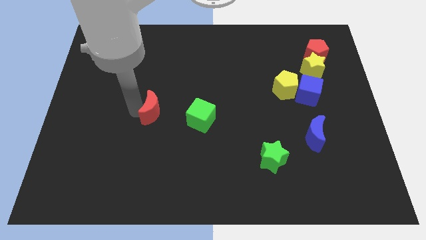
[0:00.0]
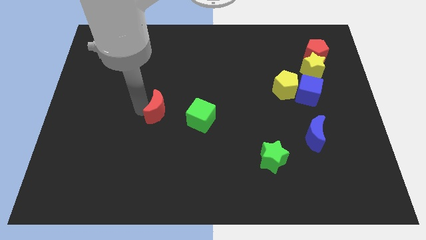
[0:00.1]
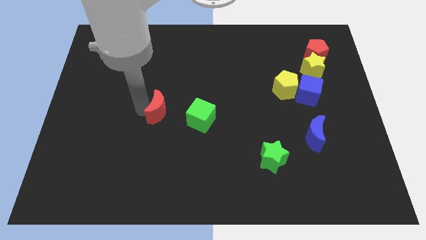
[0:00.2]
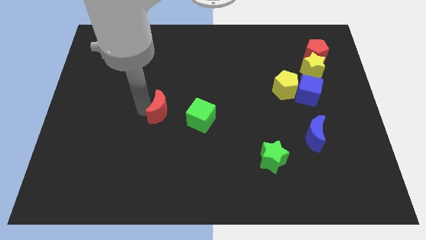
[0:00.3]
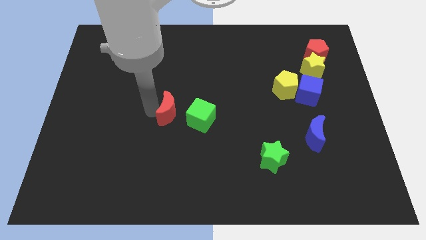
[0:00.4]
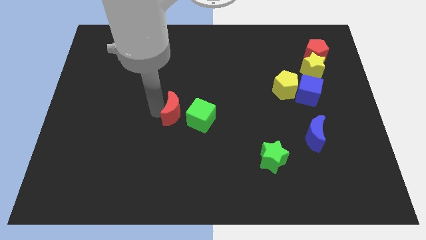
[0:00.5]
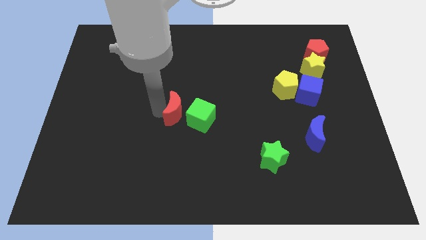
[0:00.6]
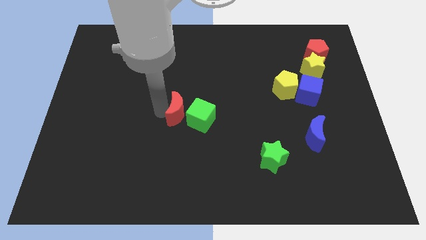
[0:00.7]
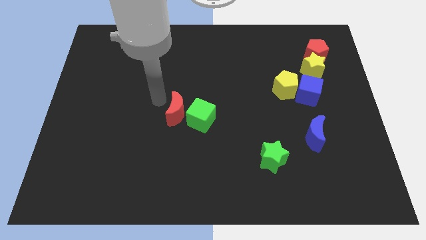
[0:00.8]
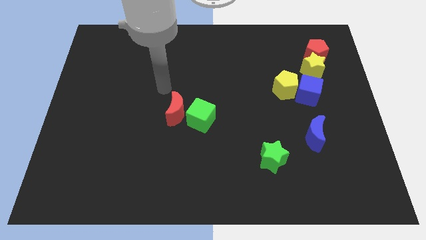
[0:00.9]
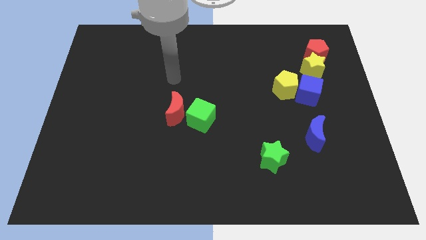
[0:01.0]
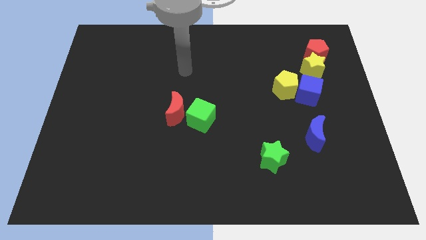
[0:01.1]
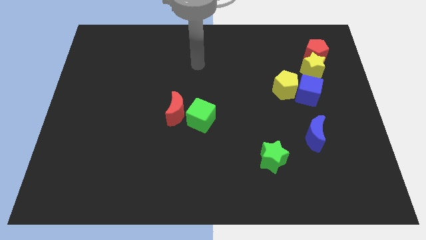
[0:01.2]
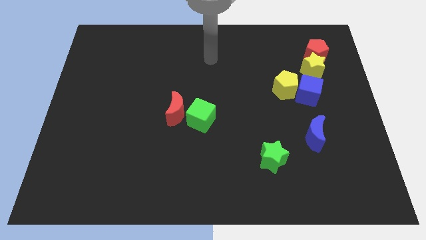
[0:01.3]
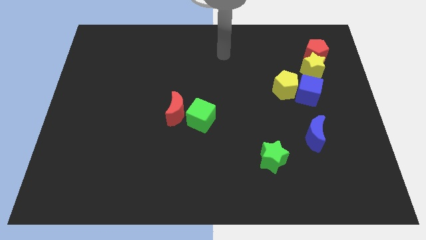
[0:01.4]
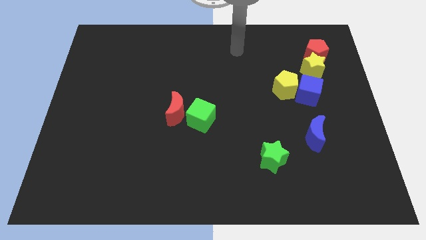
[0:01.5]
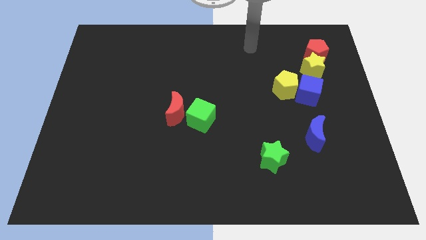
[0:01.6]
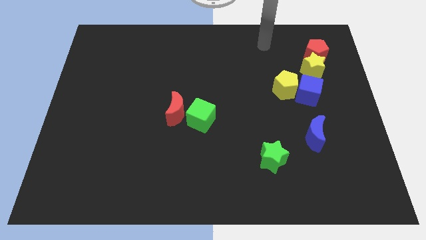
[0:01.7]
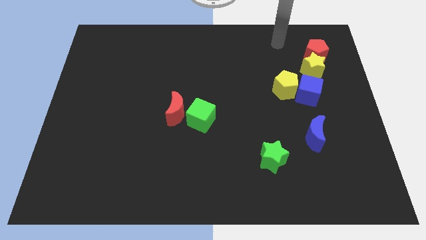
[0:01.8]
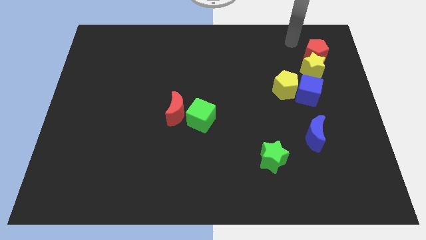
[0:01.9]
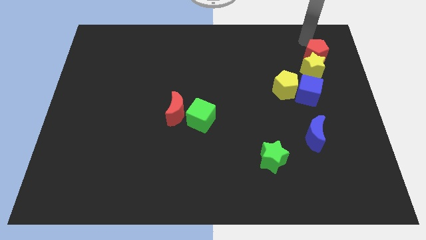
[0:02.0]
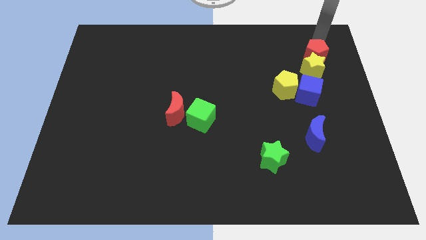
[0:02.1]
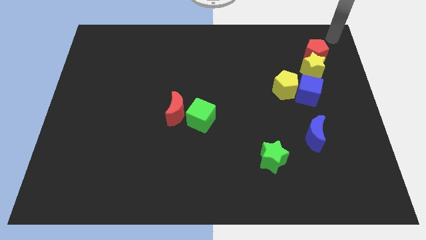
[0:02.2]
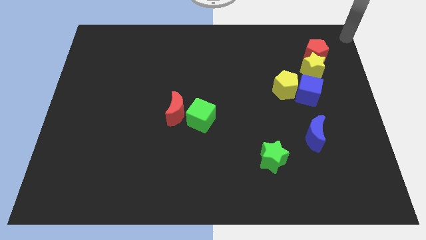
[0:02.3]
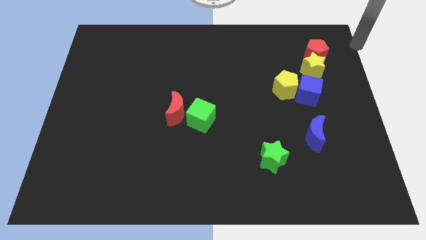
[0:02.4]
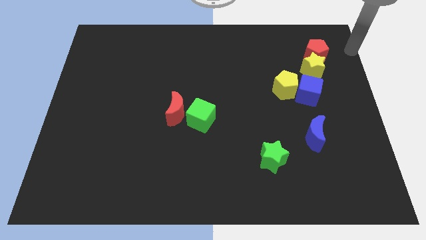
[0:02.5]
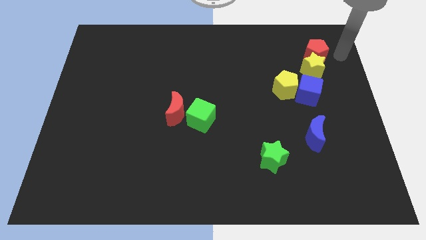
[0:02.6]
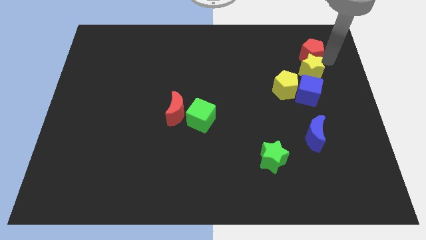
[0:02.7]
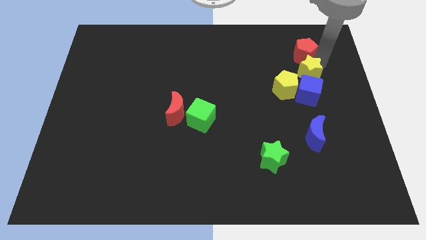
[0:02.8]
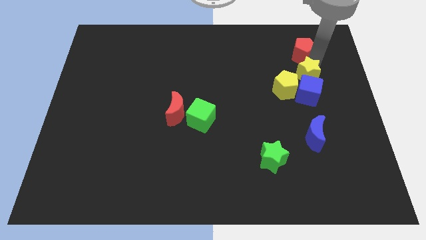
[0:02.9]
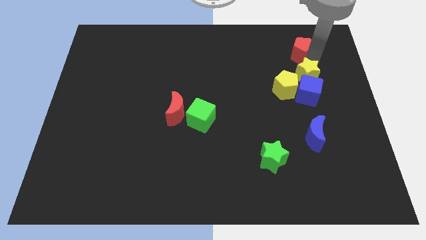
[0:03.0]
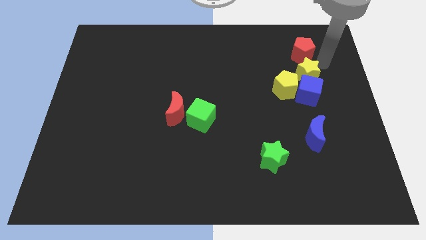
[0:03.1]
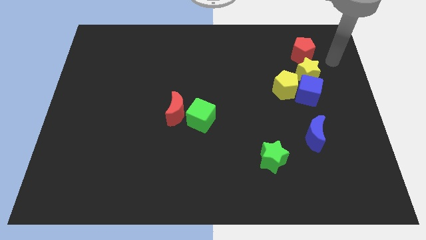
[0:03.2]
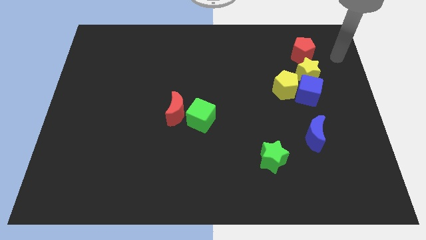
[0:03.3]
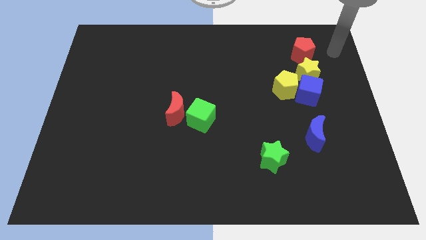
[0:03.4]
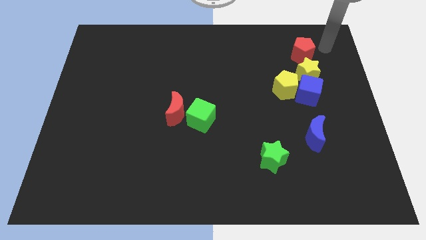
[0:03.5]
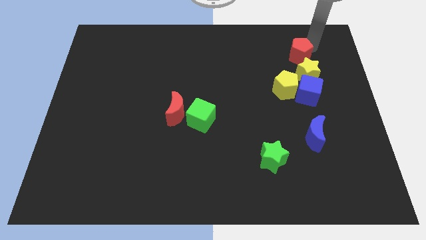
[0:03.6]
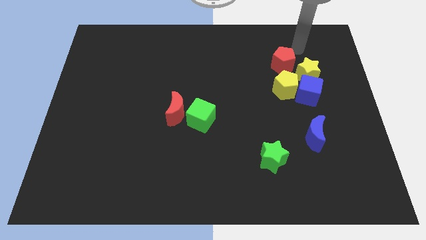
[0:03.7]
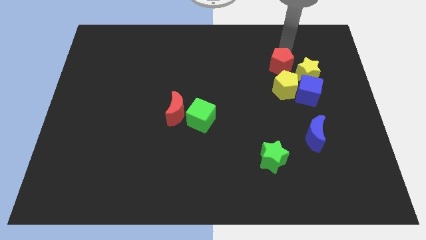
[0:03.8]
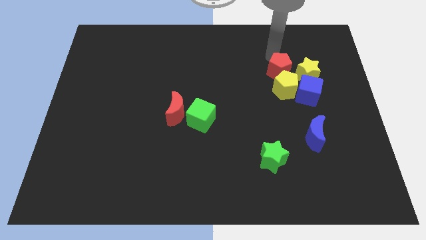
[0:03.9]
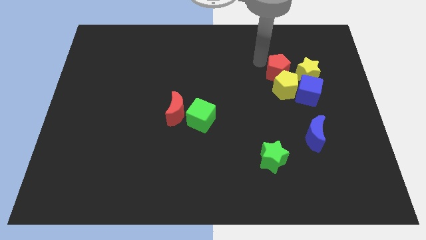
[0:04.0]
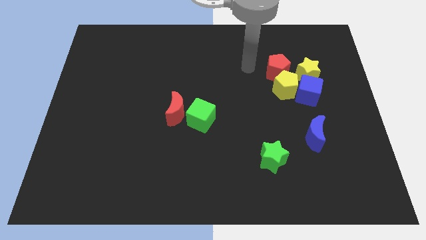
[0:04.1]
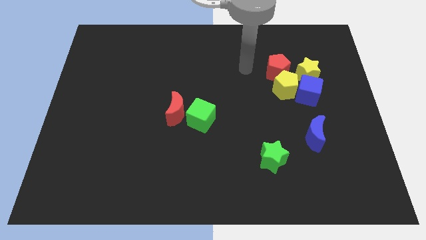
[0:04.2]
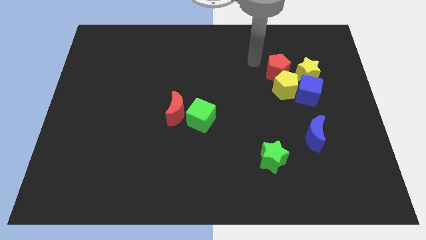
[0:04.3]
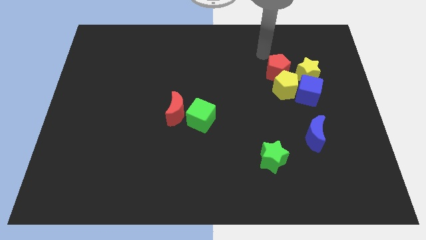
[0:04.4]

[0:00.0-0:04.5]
place the red pentagon above the yellow pentagon

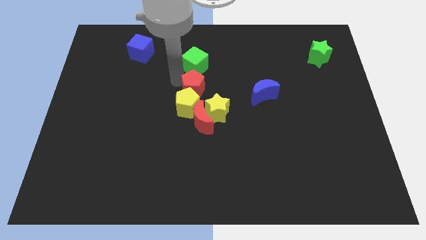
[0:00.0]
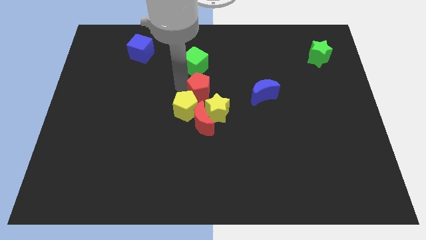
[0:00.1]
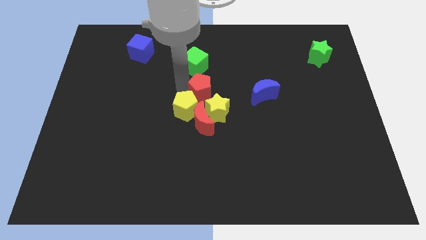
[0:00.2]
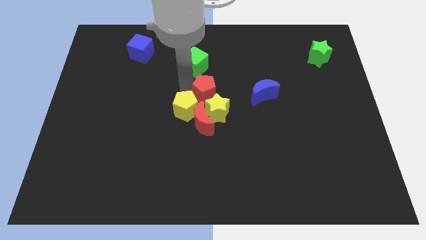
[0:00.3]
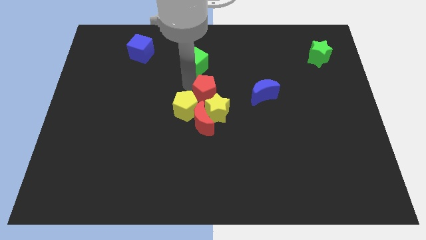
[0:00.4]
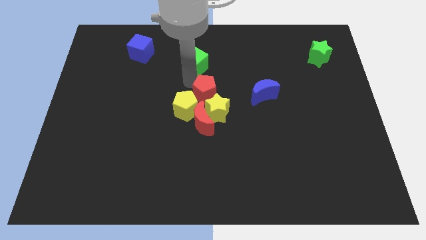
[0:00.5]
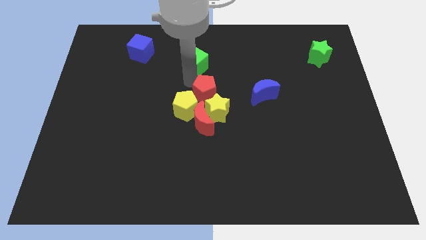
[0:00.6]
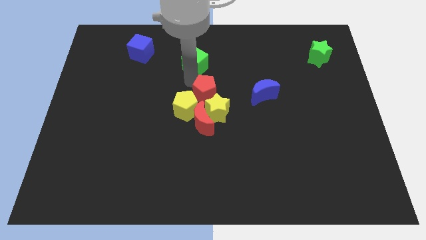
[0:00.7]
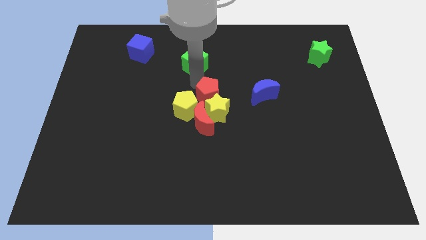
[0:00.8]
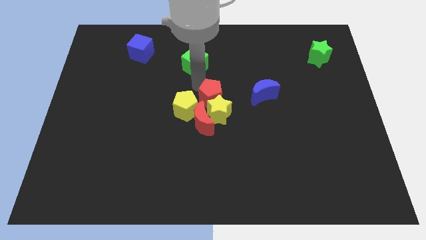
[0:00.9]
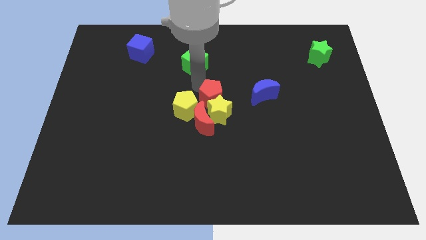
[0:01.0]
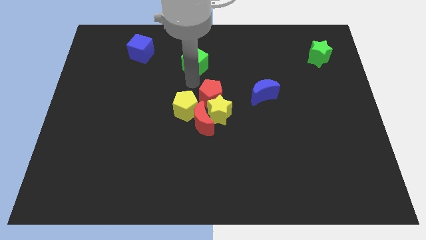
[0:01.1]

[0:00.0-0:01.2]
push the red pentagon into the yellow star

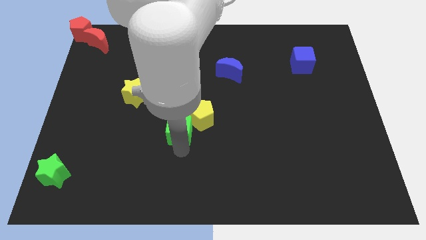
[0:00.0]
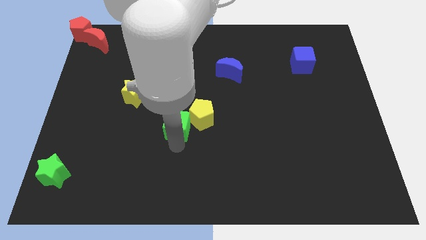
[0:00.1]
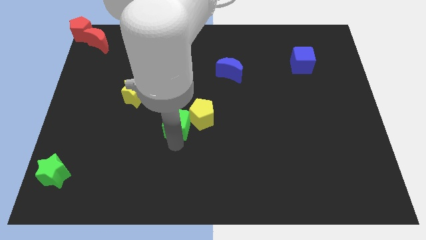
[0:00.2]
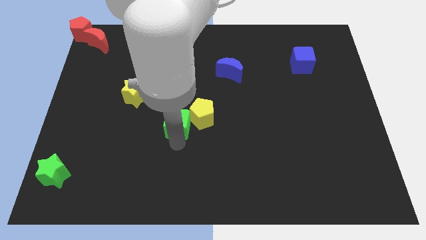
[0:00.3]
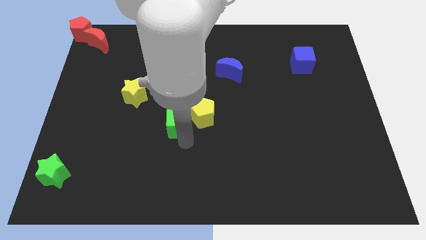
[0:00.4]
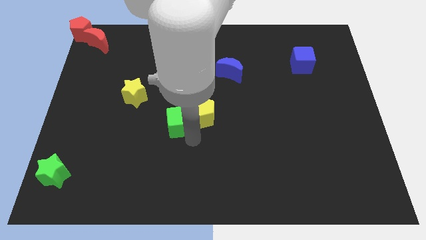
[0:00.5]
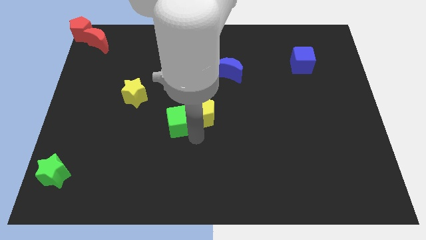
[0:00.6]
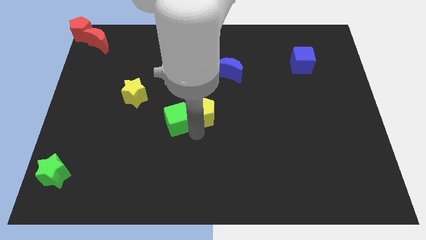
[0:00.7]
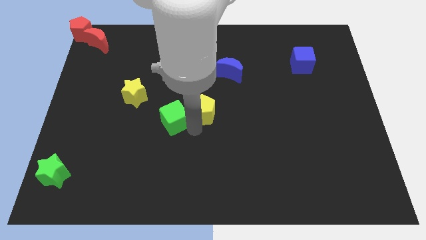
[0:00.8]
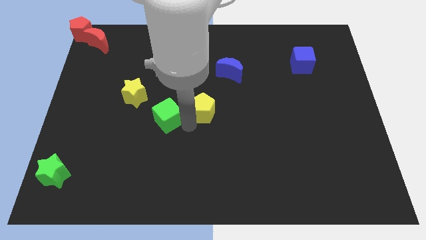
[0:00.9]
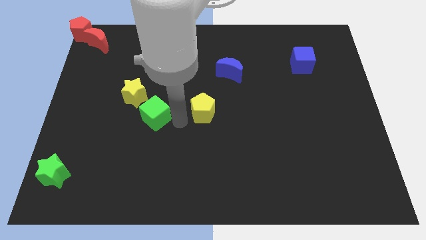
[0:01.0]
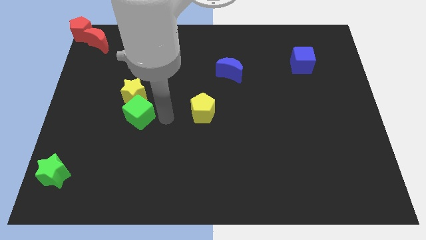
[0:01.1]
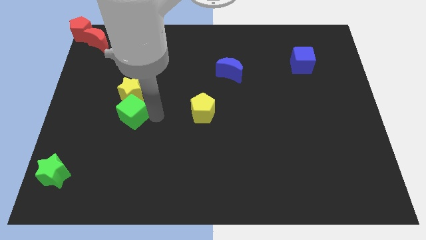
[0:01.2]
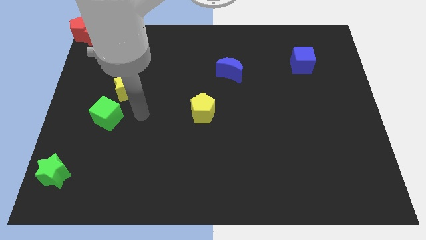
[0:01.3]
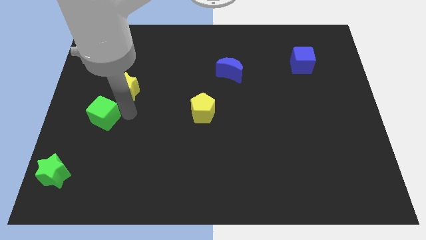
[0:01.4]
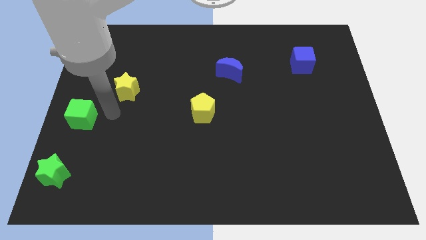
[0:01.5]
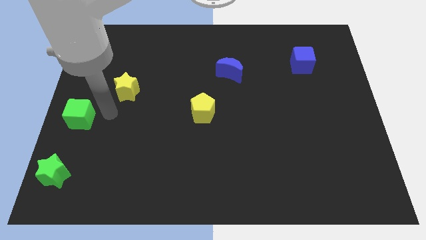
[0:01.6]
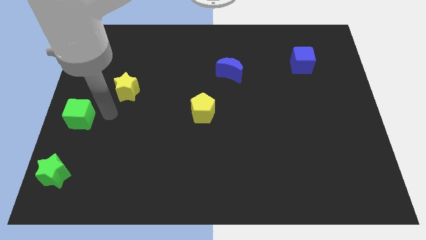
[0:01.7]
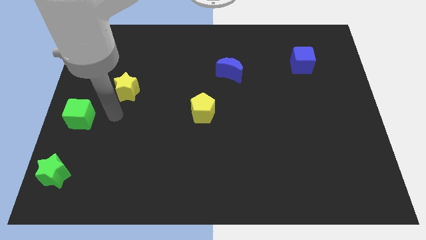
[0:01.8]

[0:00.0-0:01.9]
place the green cube above the green star

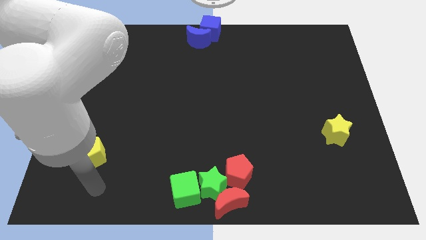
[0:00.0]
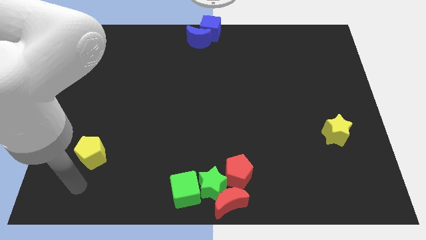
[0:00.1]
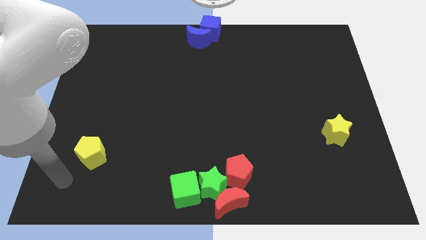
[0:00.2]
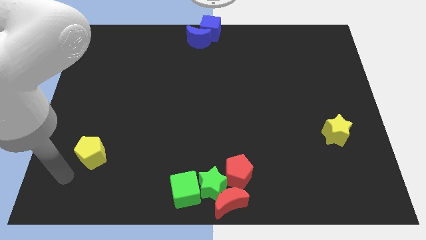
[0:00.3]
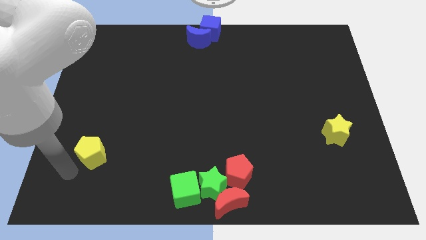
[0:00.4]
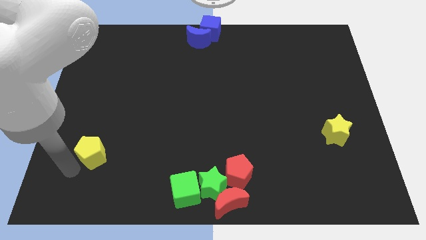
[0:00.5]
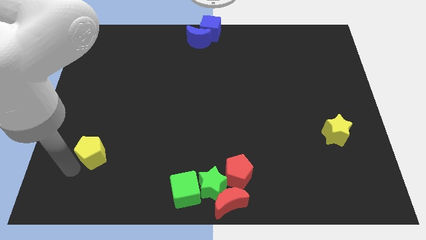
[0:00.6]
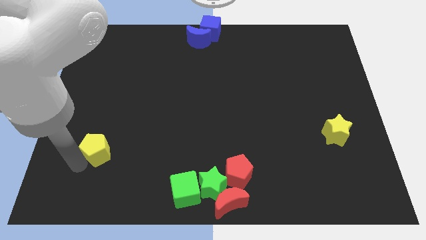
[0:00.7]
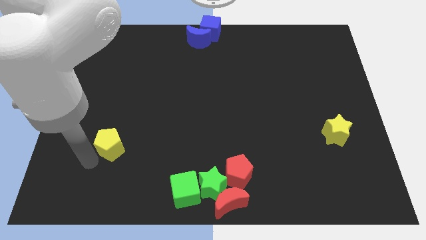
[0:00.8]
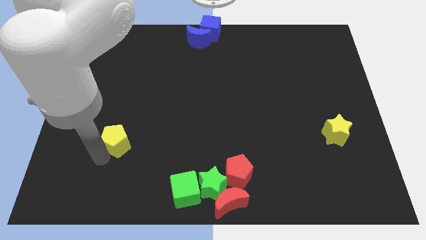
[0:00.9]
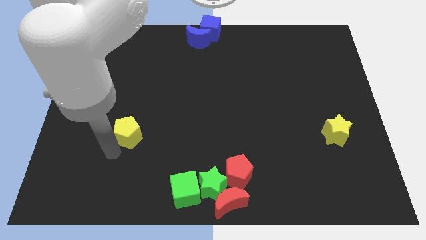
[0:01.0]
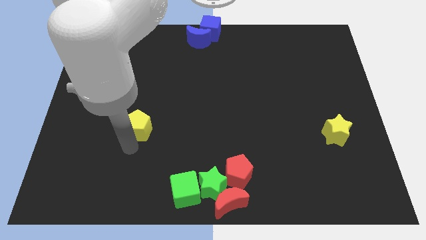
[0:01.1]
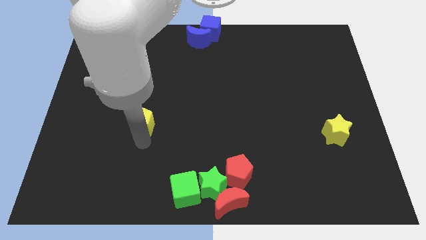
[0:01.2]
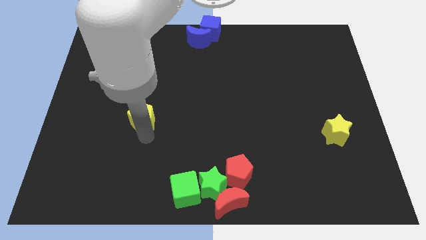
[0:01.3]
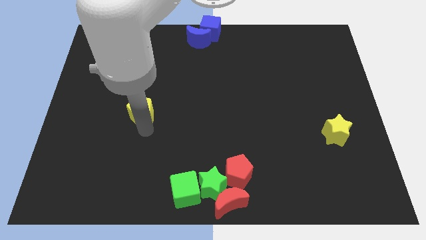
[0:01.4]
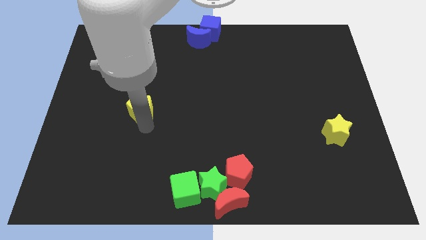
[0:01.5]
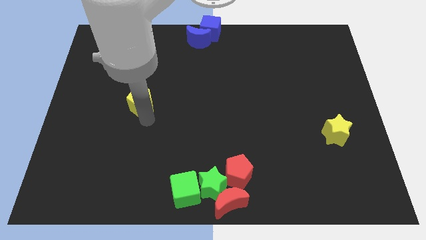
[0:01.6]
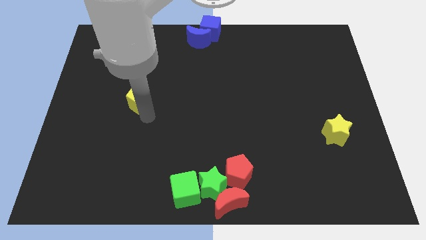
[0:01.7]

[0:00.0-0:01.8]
drag the yellow pentagon diagonally on the top left side of the green cube
